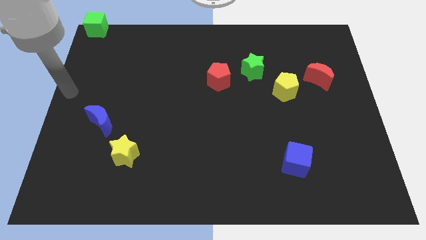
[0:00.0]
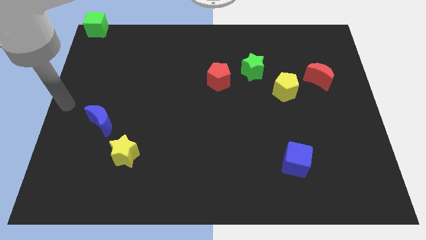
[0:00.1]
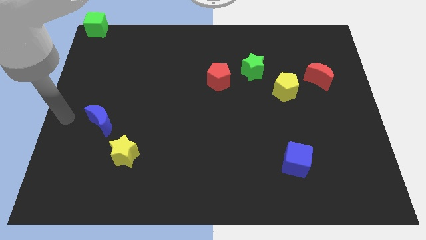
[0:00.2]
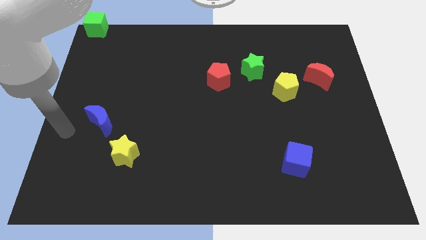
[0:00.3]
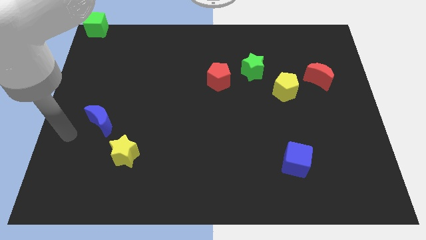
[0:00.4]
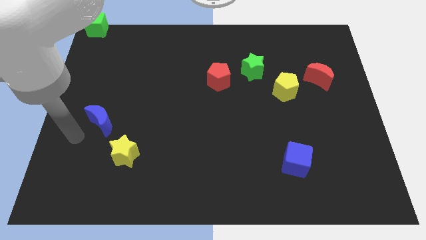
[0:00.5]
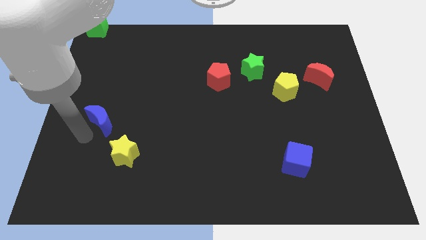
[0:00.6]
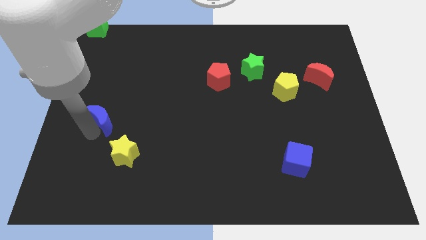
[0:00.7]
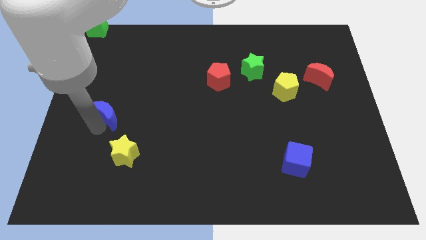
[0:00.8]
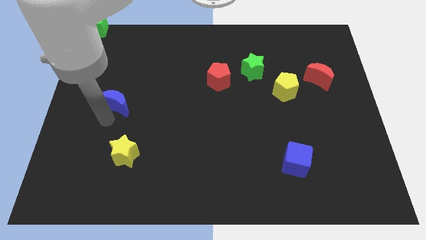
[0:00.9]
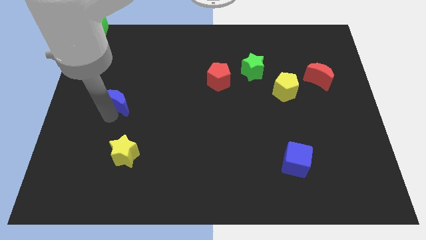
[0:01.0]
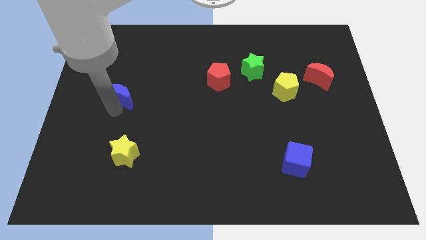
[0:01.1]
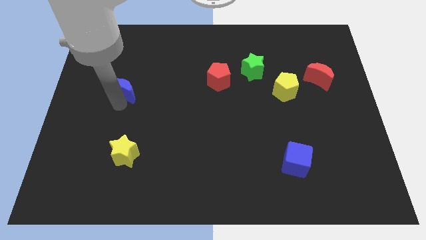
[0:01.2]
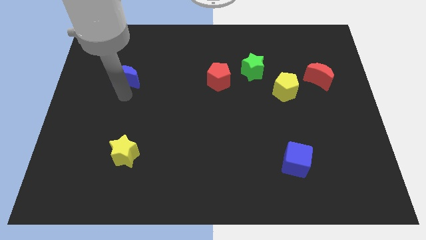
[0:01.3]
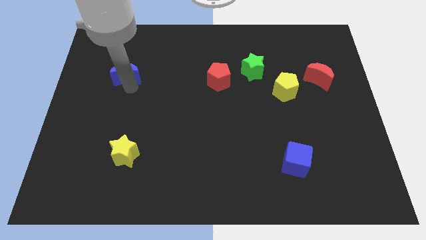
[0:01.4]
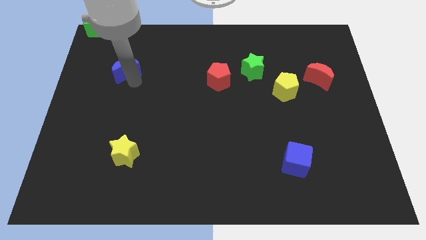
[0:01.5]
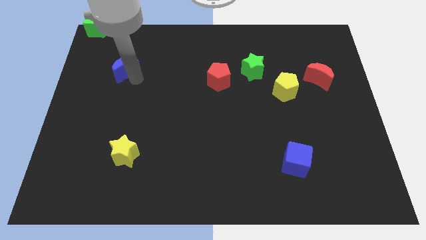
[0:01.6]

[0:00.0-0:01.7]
drag the blue crescent parallel left to the red pentagon

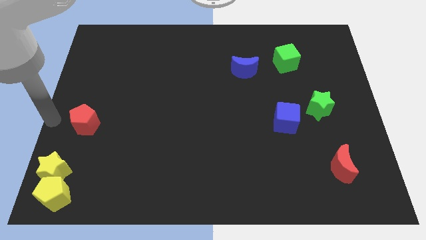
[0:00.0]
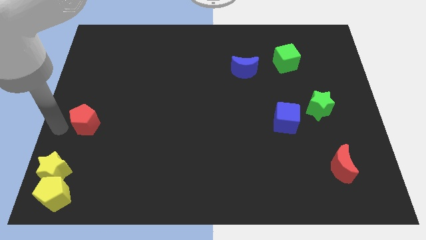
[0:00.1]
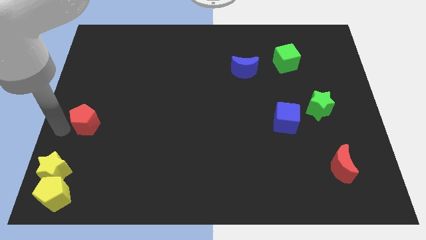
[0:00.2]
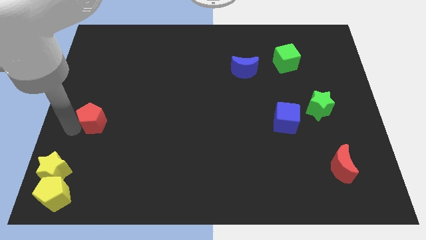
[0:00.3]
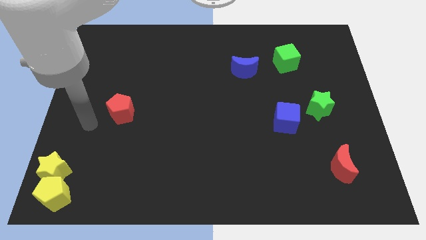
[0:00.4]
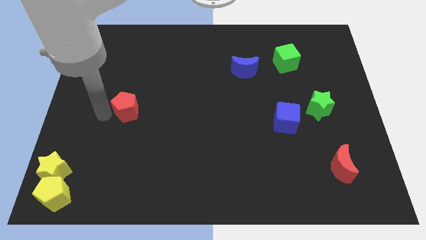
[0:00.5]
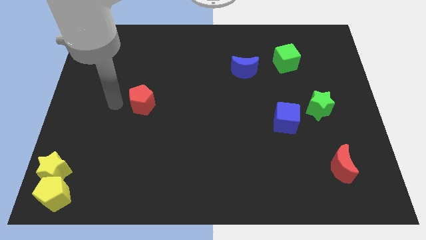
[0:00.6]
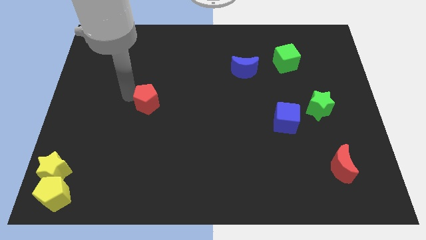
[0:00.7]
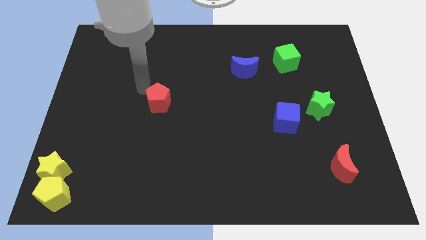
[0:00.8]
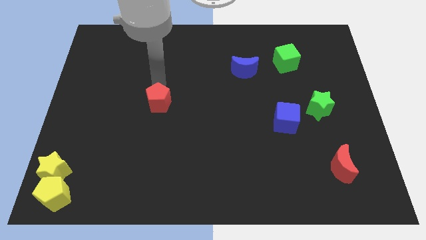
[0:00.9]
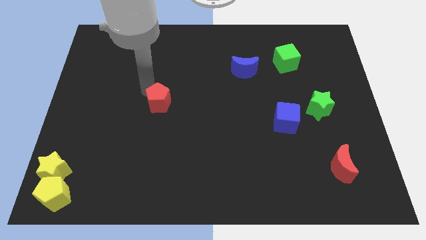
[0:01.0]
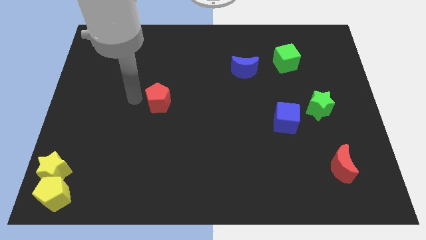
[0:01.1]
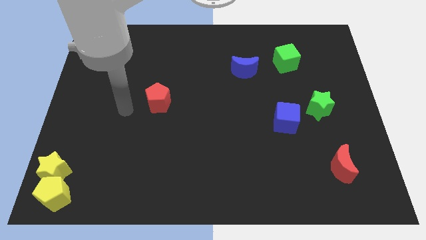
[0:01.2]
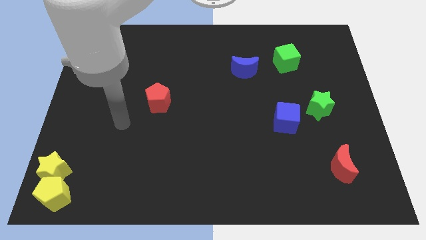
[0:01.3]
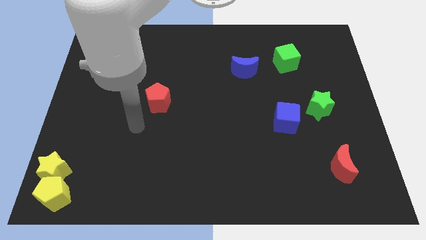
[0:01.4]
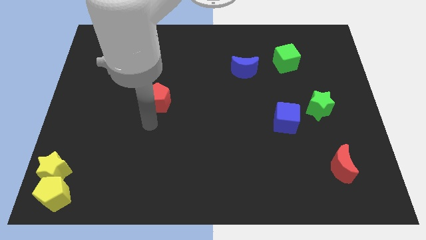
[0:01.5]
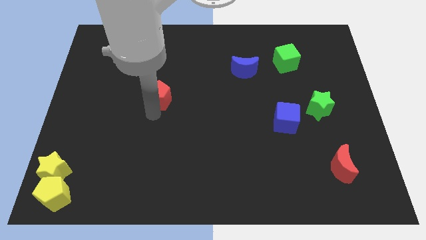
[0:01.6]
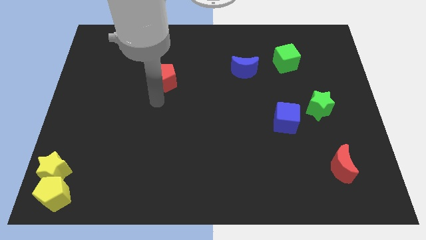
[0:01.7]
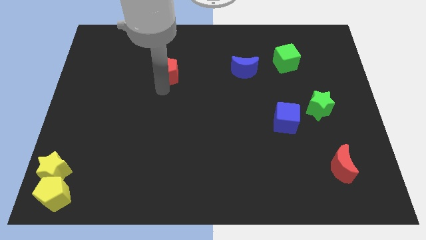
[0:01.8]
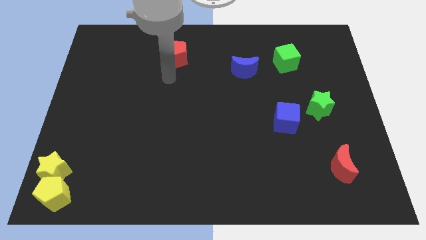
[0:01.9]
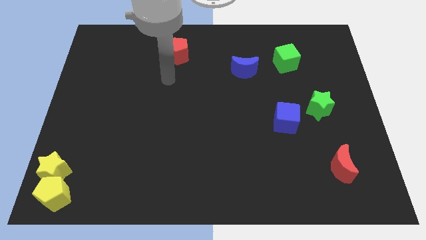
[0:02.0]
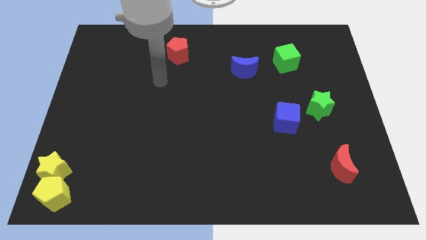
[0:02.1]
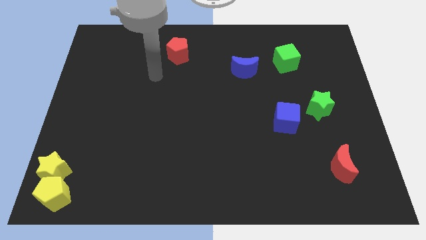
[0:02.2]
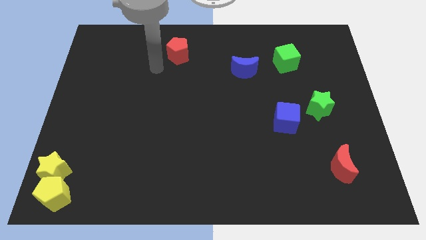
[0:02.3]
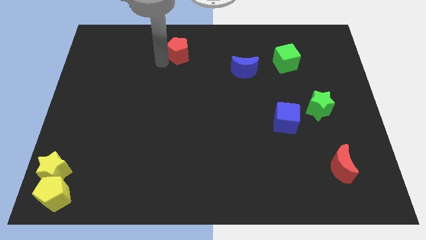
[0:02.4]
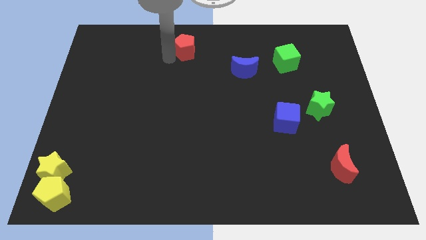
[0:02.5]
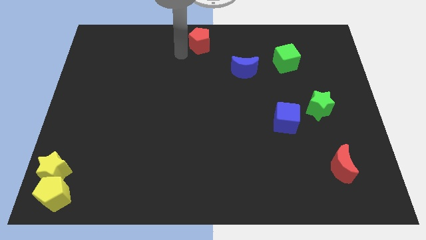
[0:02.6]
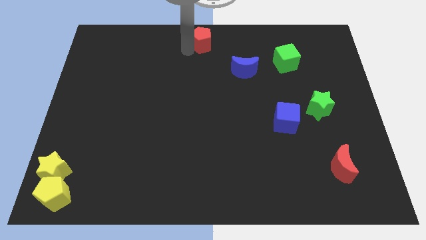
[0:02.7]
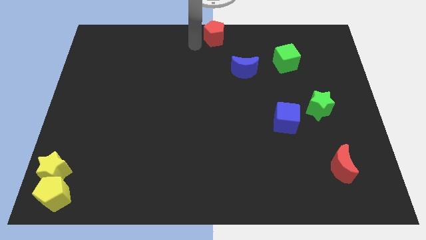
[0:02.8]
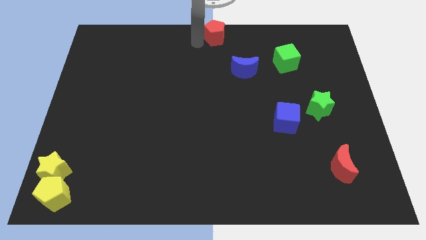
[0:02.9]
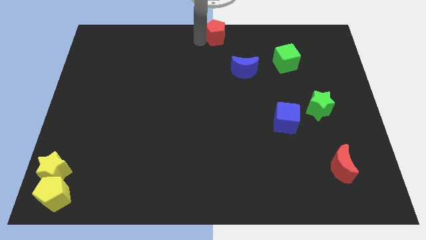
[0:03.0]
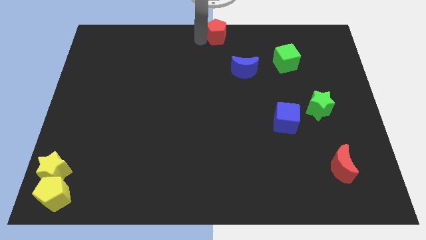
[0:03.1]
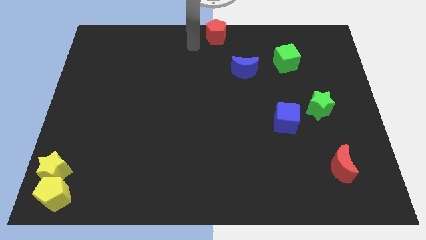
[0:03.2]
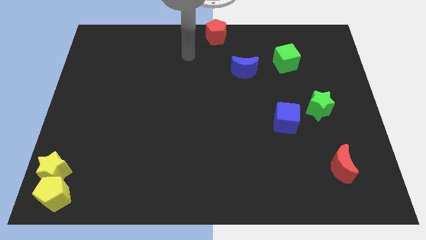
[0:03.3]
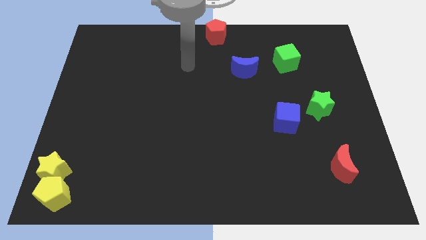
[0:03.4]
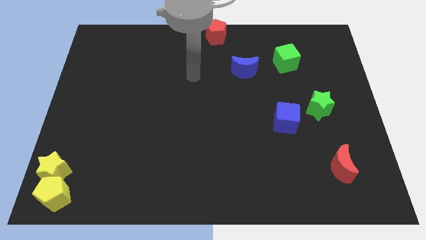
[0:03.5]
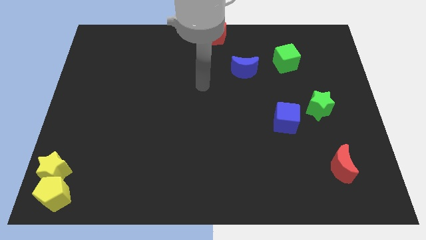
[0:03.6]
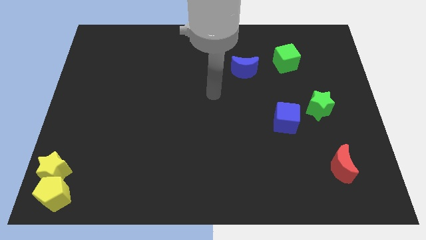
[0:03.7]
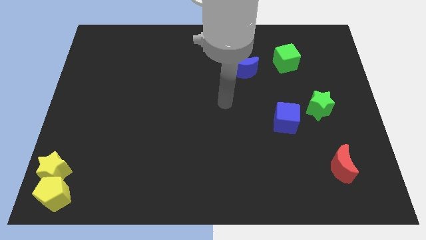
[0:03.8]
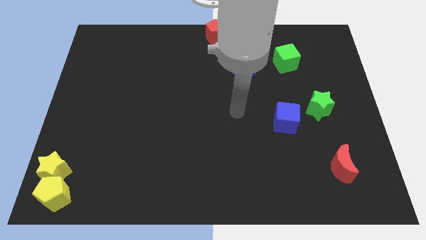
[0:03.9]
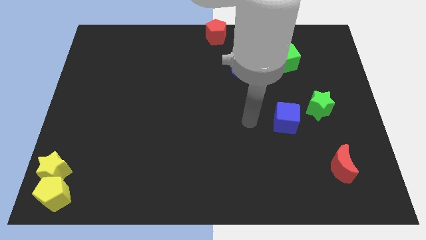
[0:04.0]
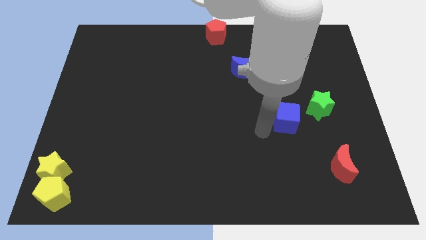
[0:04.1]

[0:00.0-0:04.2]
push the red pentagon on the top centre of the board

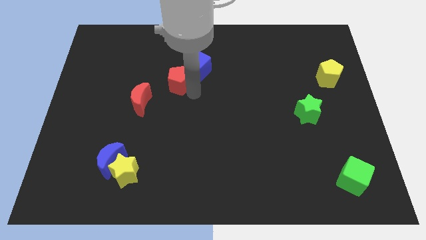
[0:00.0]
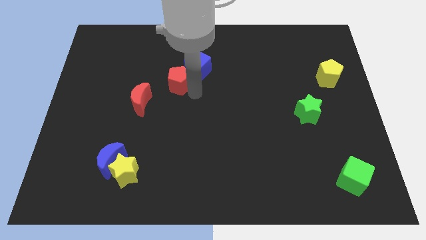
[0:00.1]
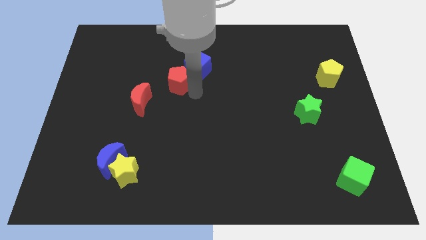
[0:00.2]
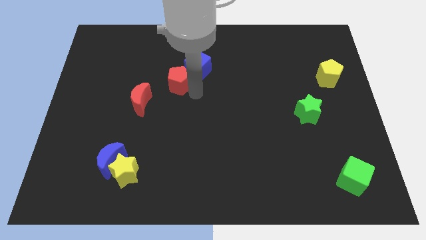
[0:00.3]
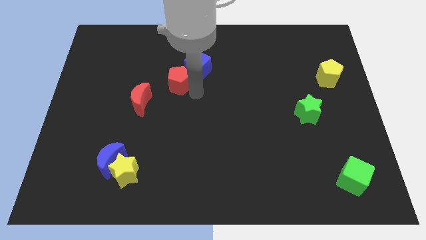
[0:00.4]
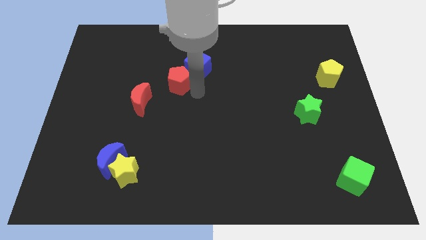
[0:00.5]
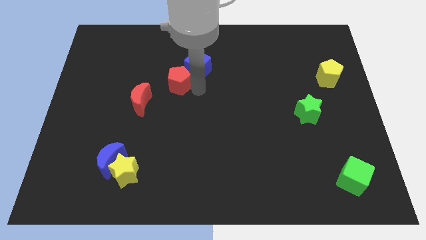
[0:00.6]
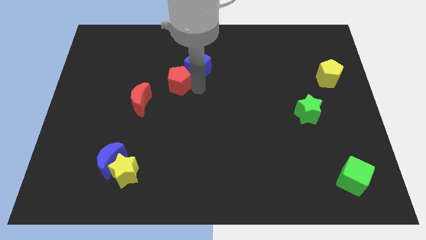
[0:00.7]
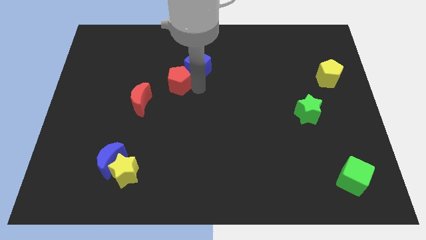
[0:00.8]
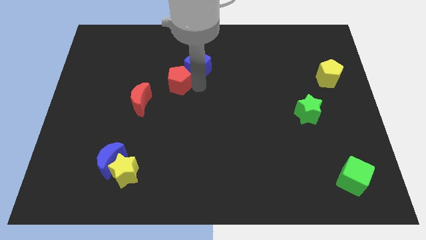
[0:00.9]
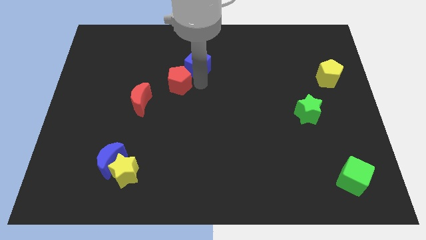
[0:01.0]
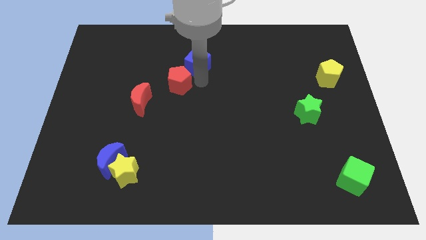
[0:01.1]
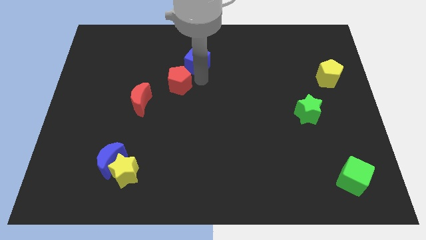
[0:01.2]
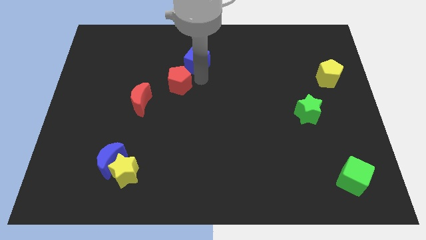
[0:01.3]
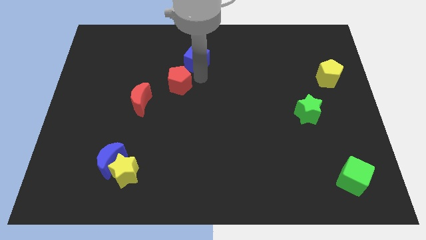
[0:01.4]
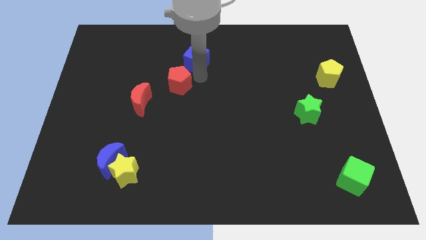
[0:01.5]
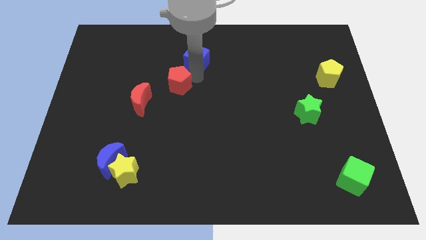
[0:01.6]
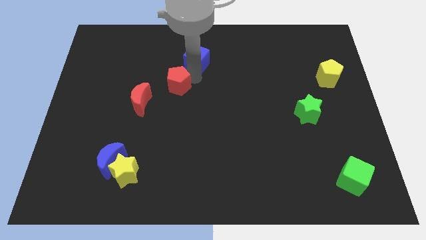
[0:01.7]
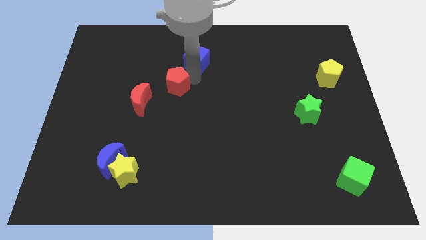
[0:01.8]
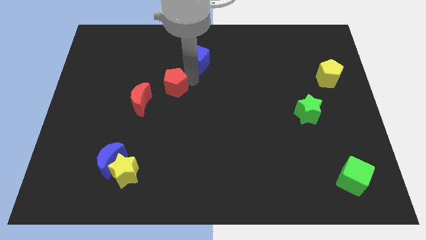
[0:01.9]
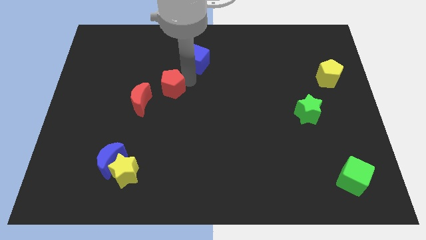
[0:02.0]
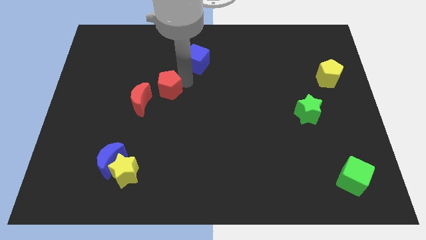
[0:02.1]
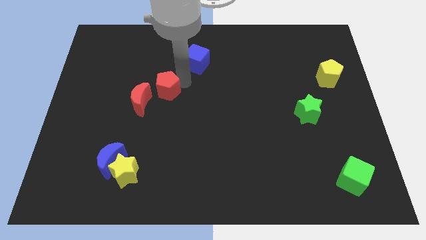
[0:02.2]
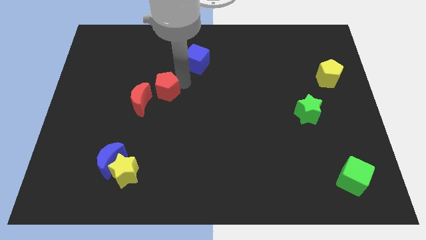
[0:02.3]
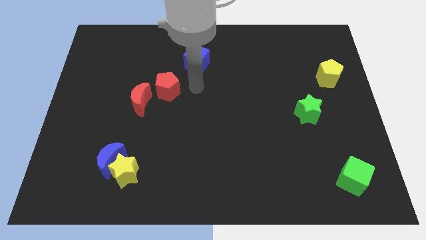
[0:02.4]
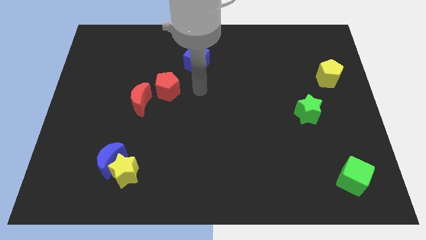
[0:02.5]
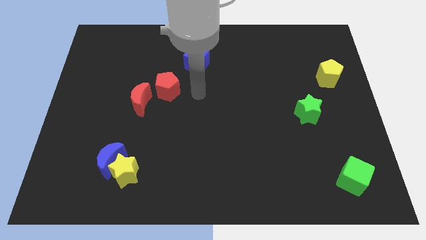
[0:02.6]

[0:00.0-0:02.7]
separate the red pentagon and blue cube

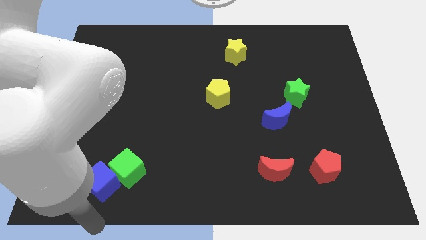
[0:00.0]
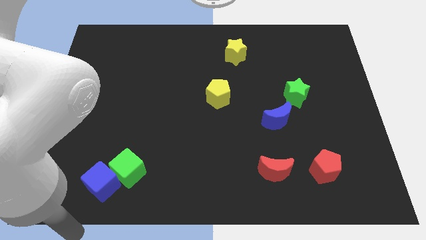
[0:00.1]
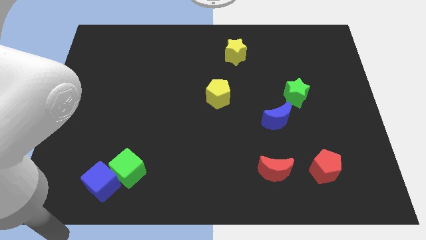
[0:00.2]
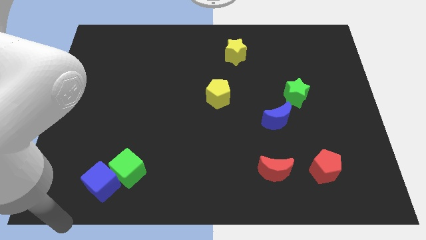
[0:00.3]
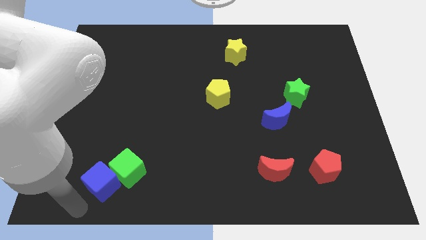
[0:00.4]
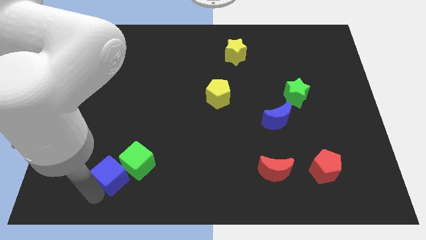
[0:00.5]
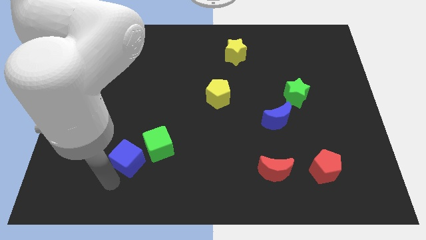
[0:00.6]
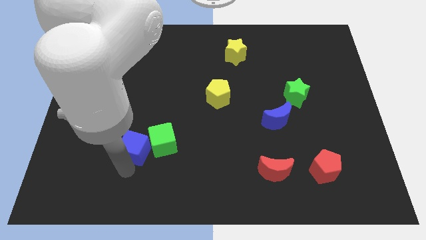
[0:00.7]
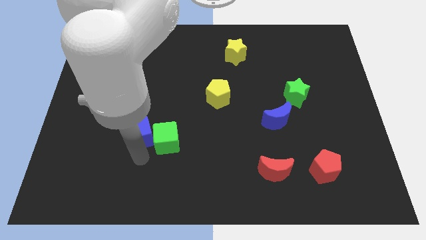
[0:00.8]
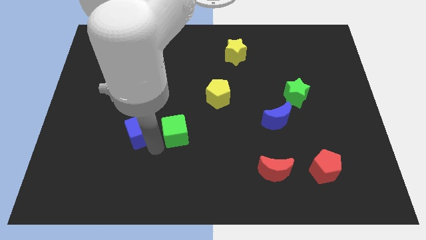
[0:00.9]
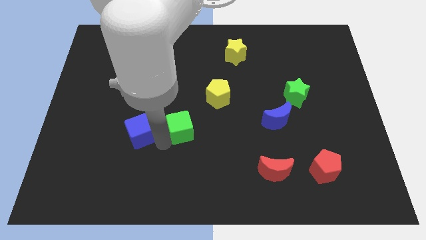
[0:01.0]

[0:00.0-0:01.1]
slide green cube and blue cube slightly to the right
